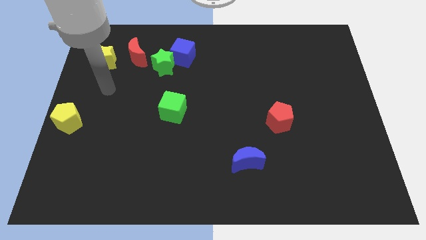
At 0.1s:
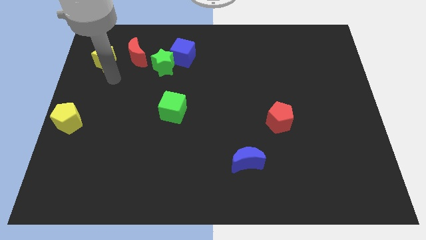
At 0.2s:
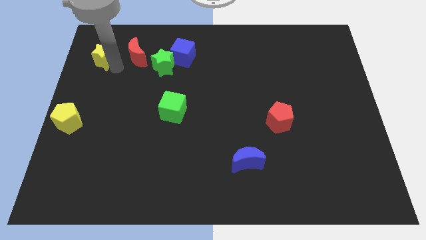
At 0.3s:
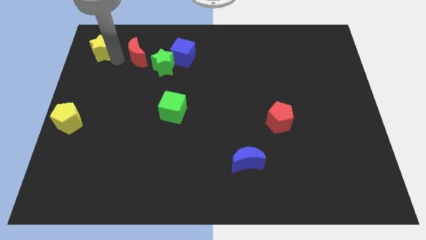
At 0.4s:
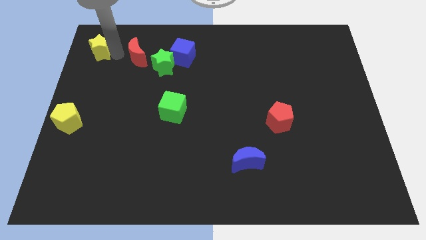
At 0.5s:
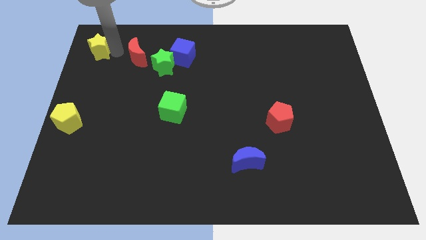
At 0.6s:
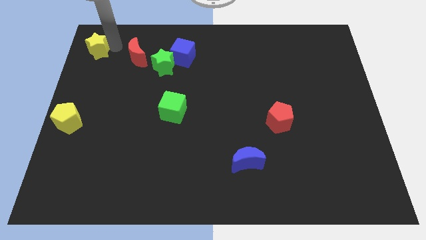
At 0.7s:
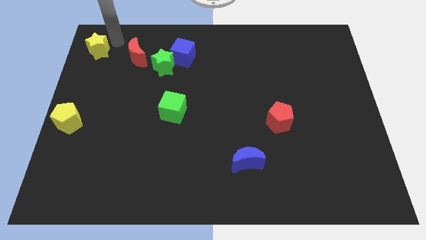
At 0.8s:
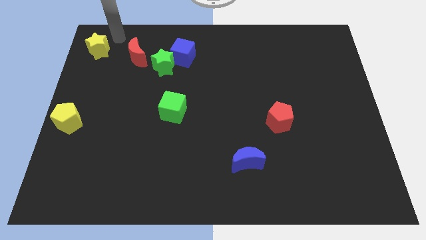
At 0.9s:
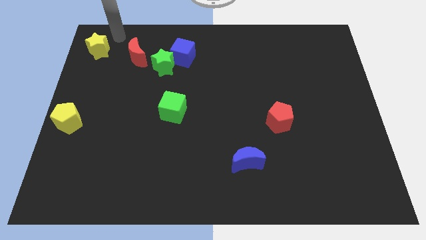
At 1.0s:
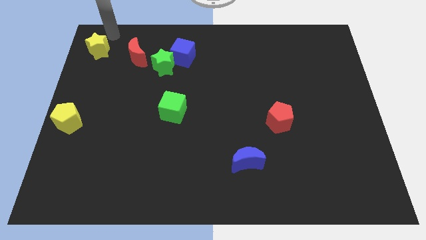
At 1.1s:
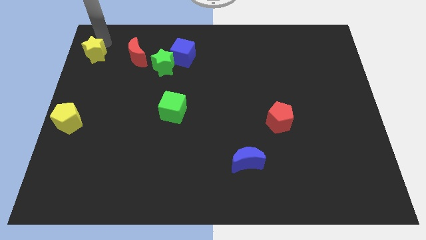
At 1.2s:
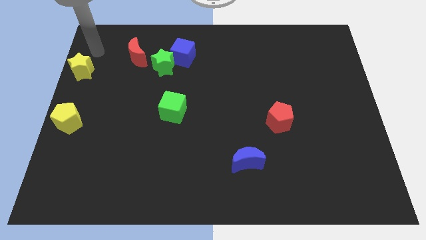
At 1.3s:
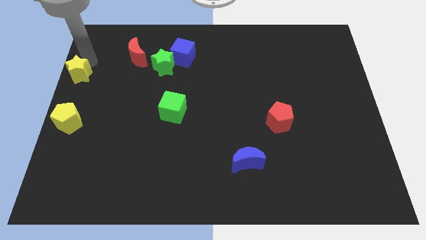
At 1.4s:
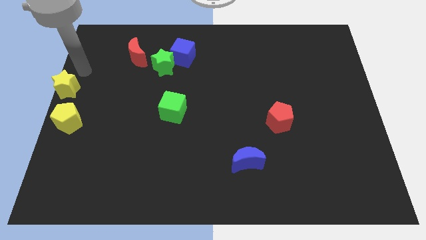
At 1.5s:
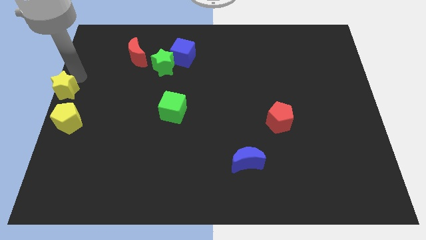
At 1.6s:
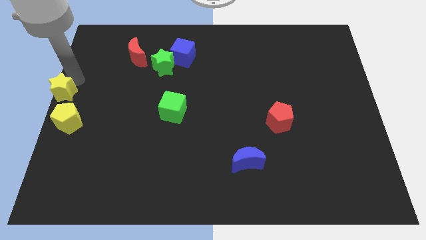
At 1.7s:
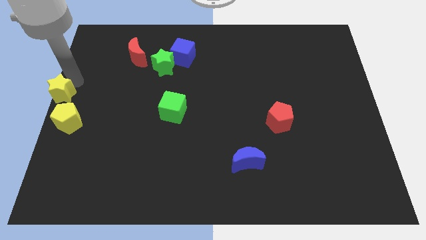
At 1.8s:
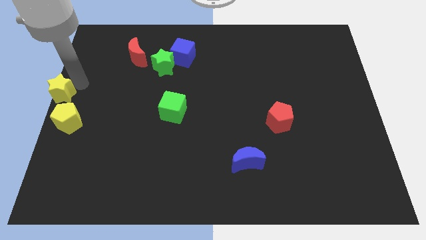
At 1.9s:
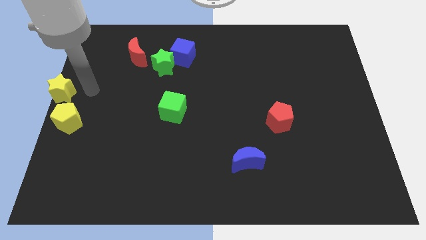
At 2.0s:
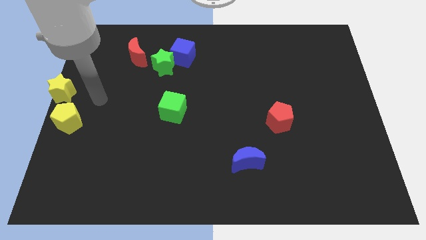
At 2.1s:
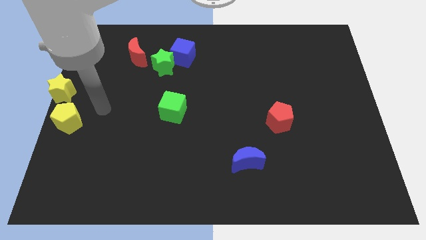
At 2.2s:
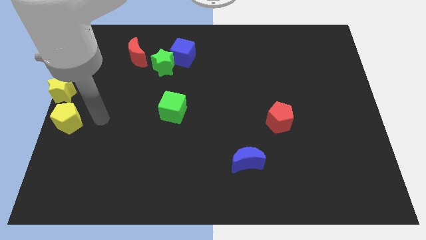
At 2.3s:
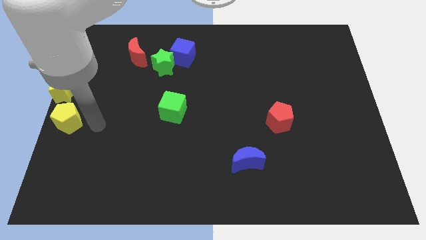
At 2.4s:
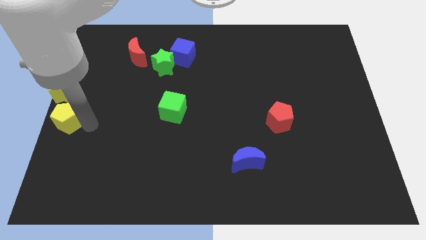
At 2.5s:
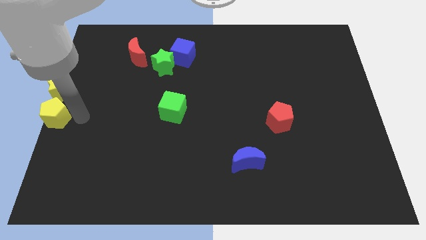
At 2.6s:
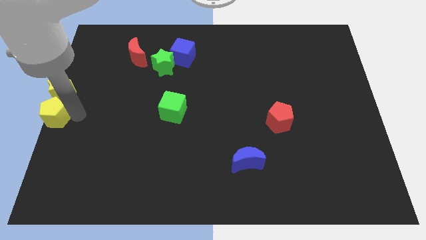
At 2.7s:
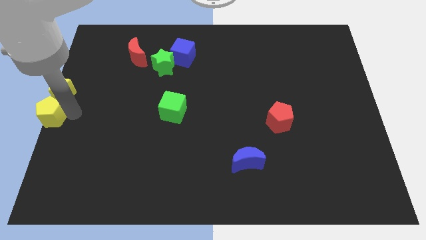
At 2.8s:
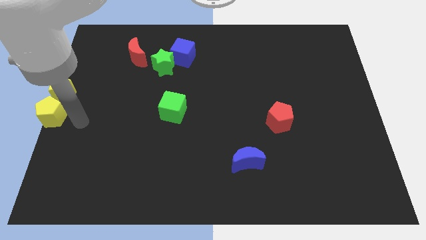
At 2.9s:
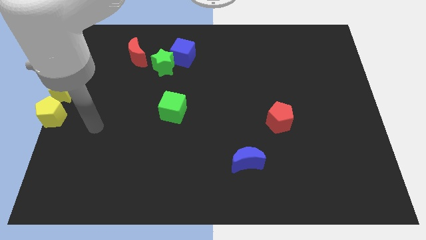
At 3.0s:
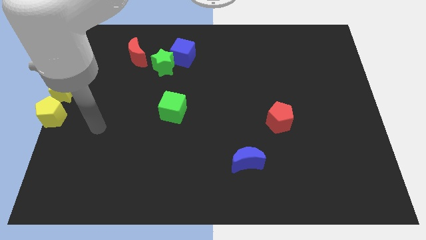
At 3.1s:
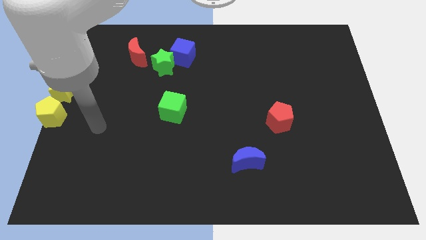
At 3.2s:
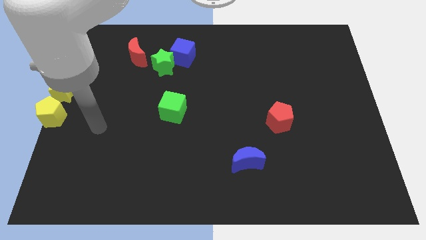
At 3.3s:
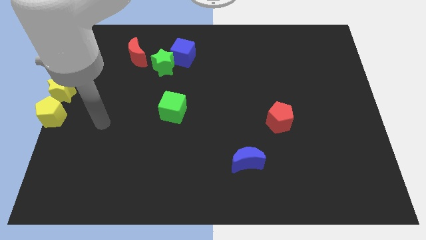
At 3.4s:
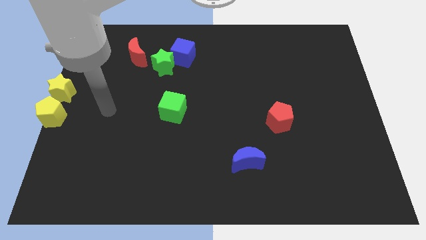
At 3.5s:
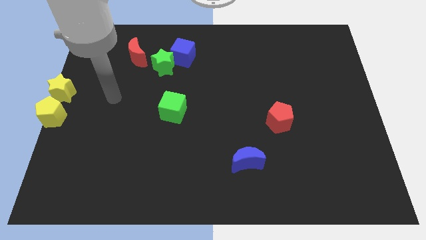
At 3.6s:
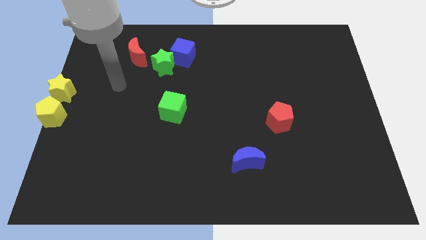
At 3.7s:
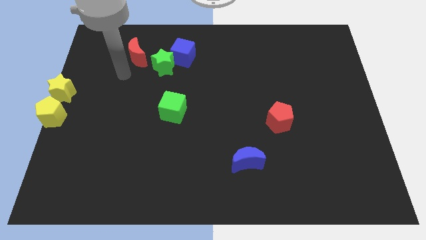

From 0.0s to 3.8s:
adjust the yellow pentagon vertically below the yellow star

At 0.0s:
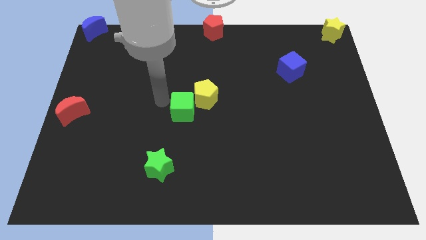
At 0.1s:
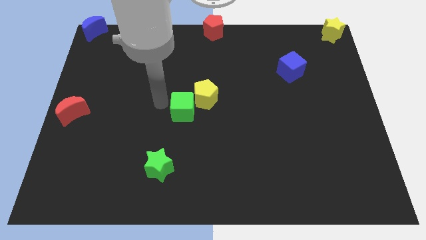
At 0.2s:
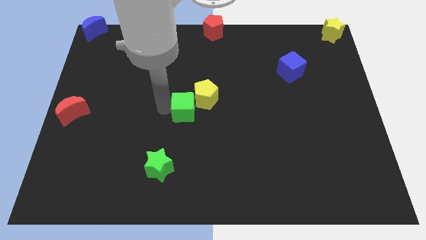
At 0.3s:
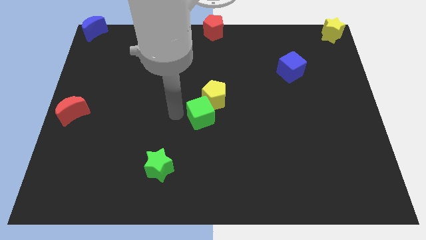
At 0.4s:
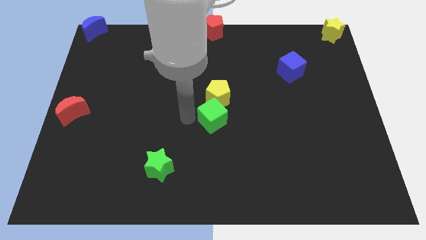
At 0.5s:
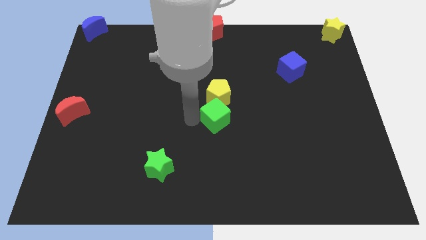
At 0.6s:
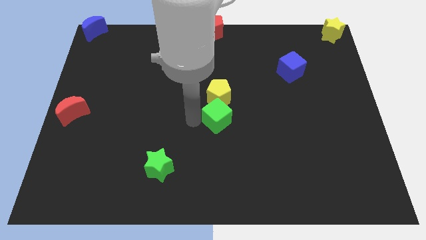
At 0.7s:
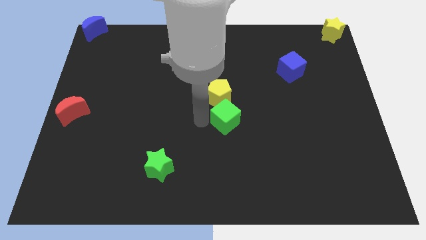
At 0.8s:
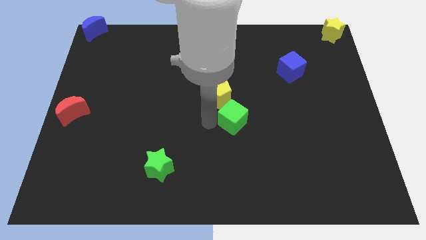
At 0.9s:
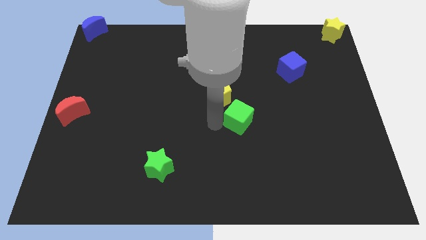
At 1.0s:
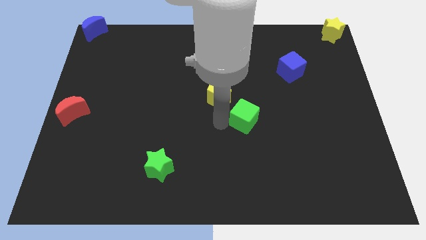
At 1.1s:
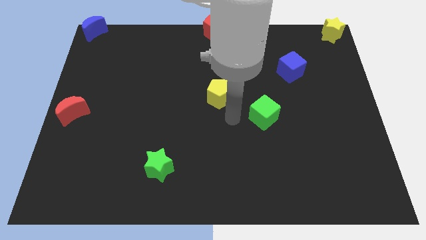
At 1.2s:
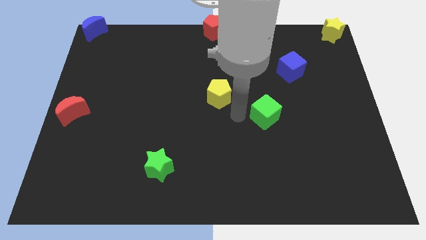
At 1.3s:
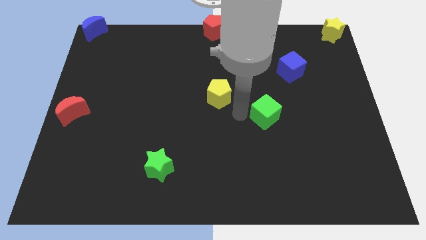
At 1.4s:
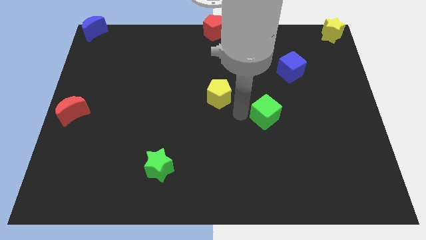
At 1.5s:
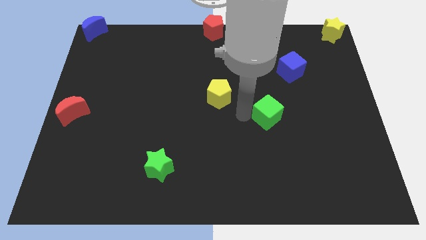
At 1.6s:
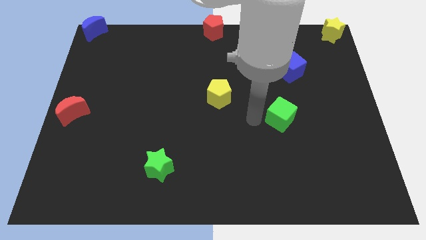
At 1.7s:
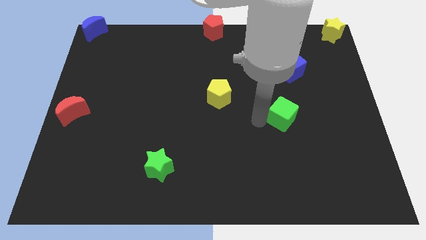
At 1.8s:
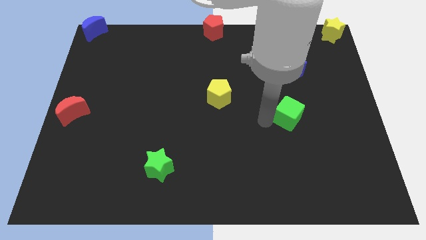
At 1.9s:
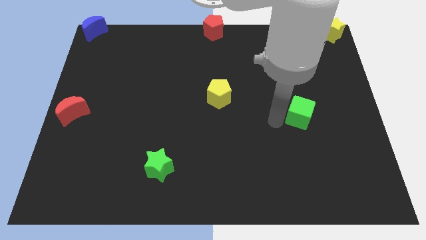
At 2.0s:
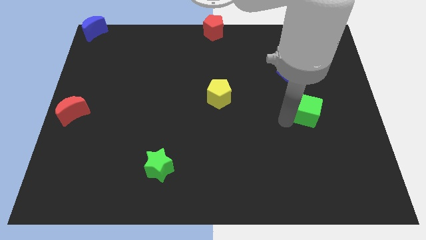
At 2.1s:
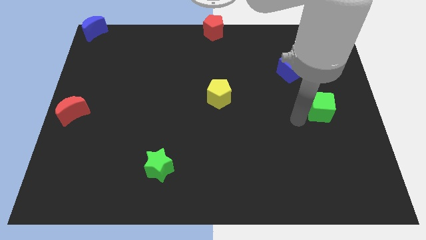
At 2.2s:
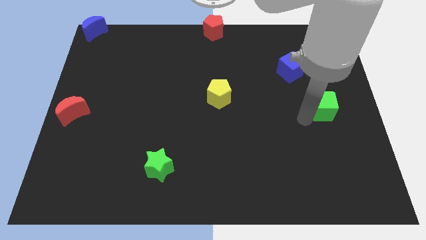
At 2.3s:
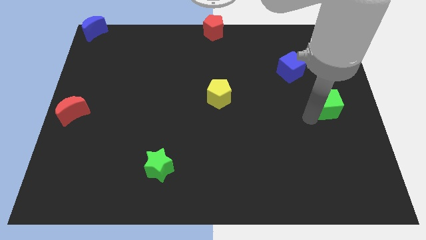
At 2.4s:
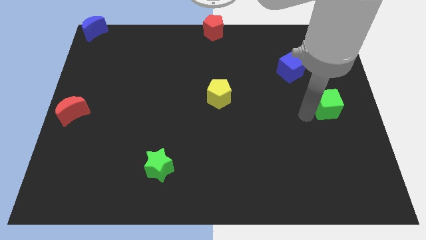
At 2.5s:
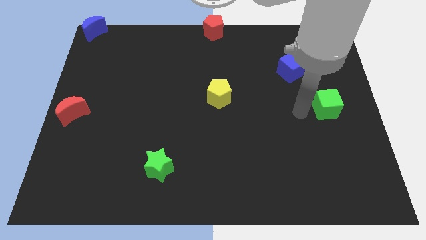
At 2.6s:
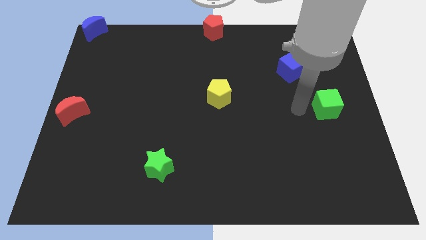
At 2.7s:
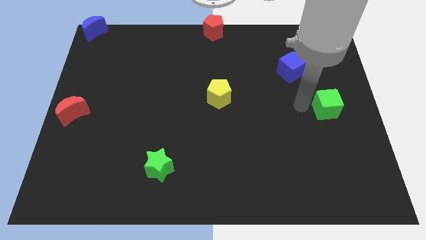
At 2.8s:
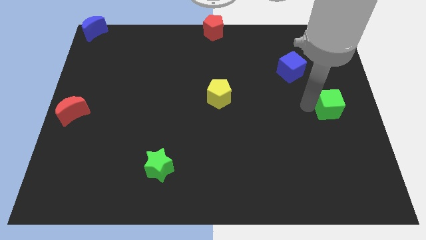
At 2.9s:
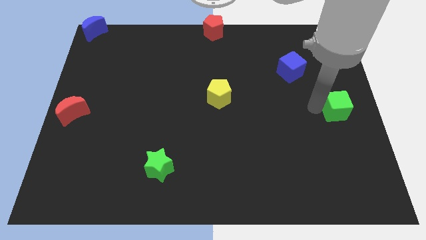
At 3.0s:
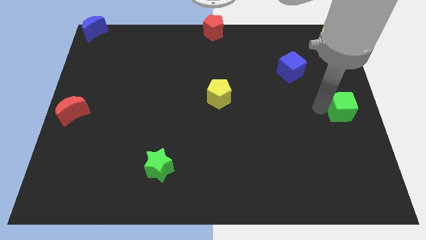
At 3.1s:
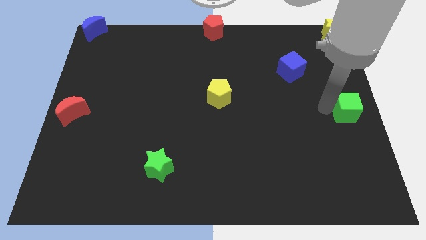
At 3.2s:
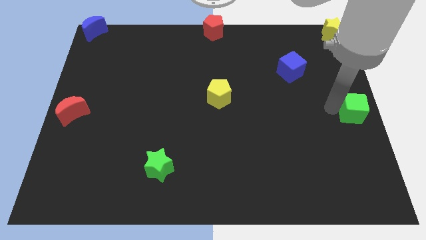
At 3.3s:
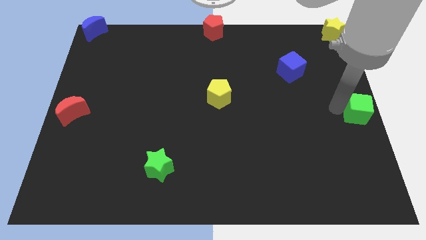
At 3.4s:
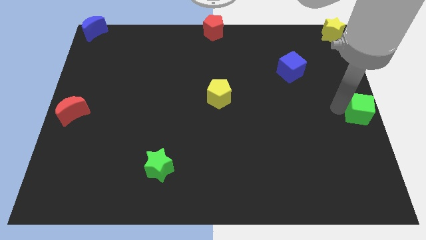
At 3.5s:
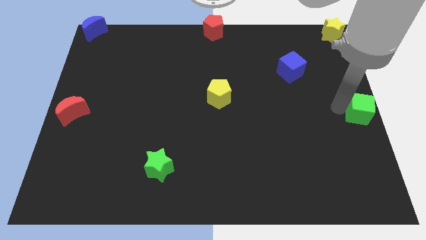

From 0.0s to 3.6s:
push the green cube right center of the board

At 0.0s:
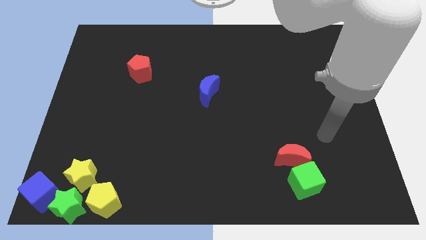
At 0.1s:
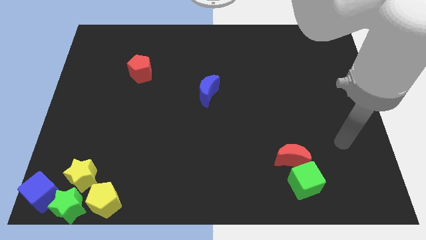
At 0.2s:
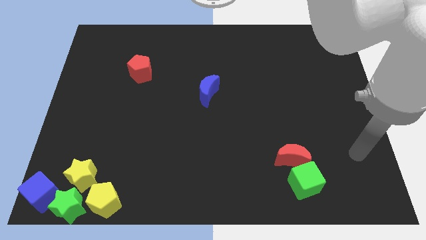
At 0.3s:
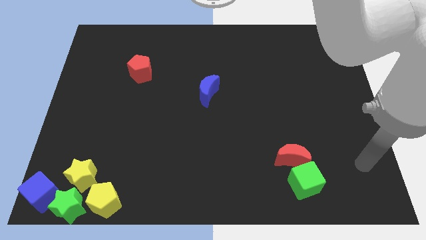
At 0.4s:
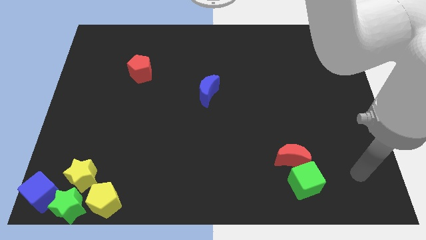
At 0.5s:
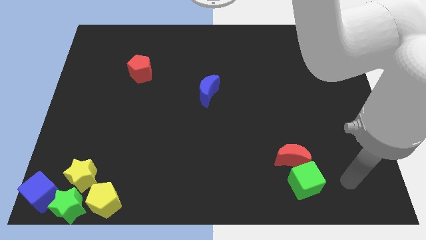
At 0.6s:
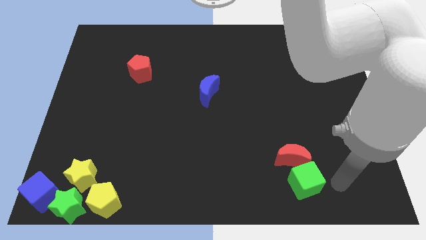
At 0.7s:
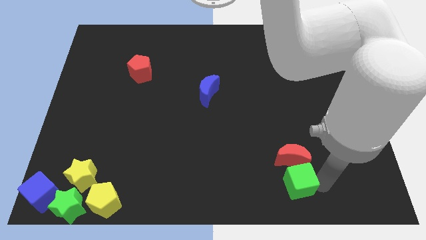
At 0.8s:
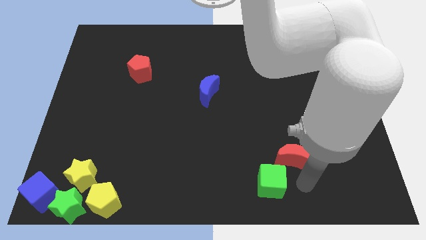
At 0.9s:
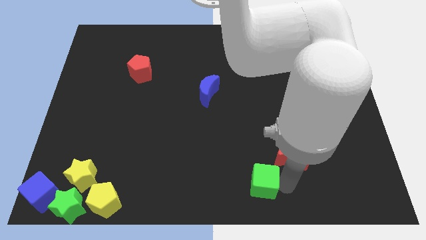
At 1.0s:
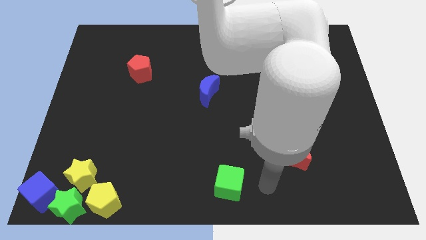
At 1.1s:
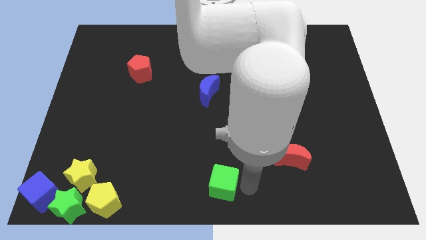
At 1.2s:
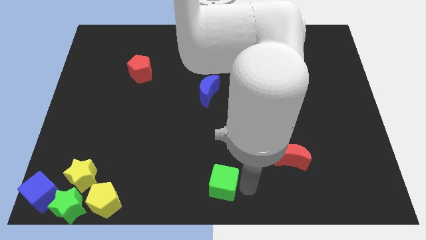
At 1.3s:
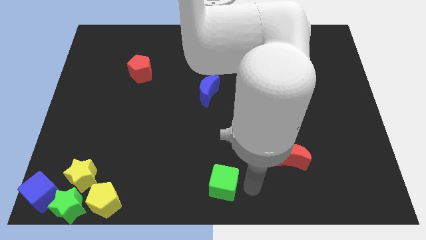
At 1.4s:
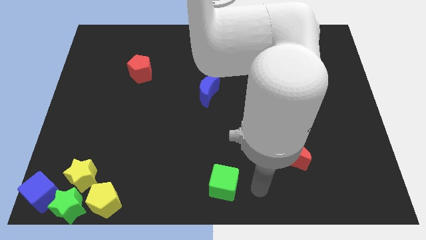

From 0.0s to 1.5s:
push the green cube to the bottom centre

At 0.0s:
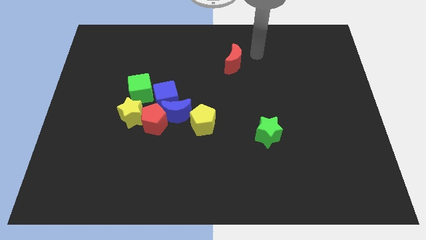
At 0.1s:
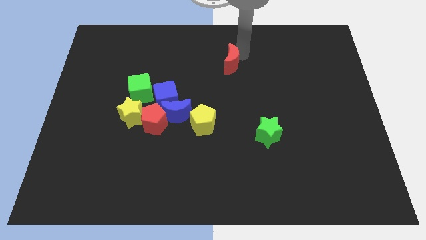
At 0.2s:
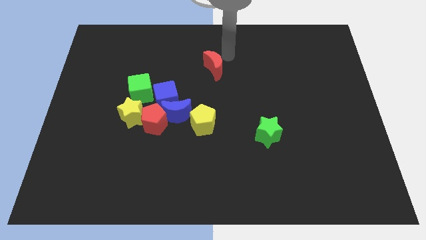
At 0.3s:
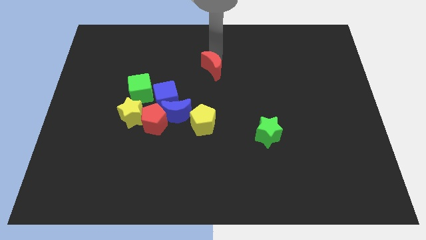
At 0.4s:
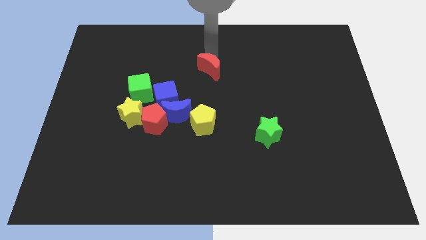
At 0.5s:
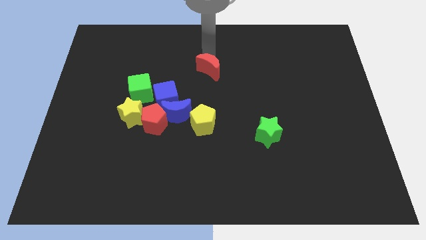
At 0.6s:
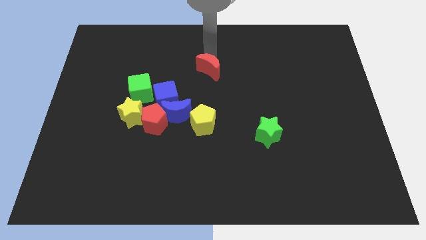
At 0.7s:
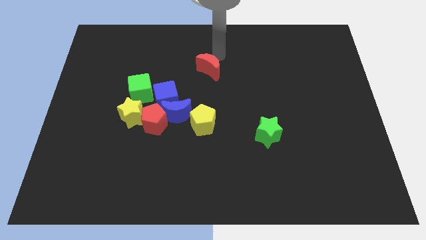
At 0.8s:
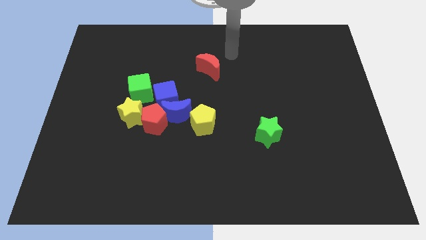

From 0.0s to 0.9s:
place the red crescent vertically above the yellow pentagon
